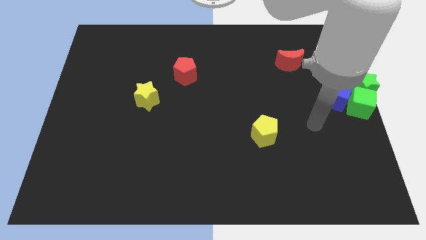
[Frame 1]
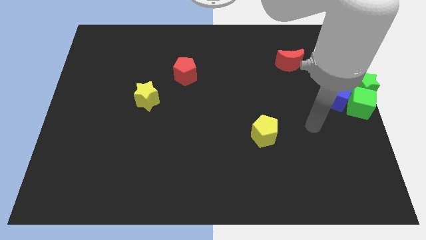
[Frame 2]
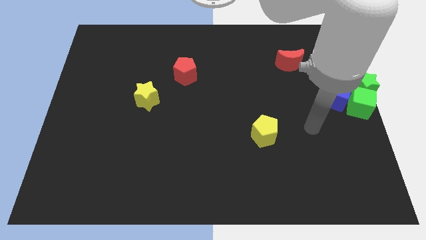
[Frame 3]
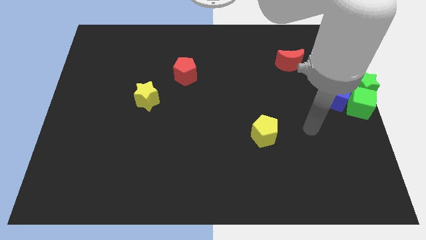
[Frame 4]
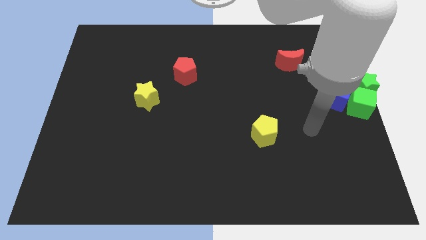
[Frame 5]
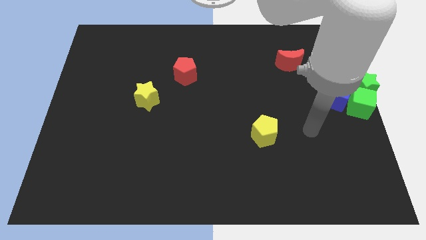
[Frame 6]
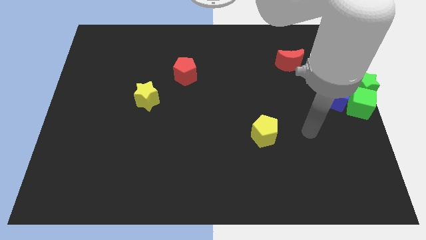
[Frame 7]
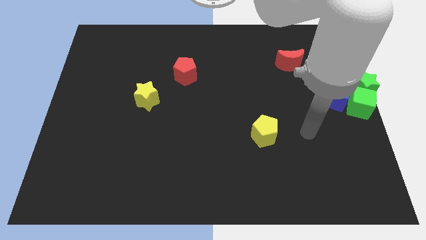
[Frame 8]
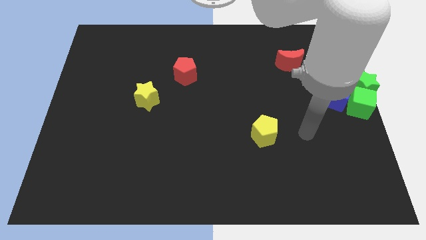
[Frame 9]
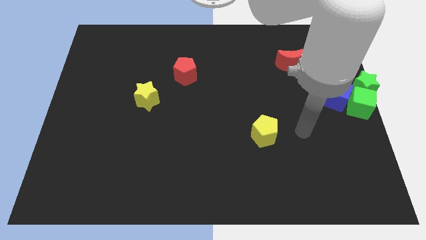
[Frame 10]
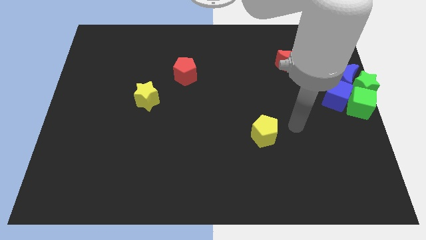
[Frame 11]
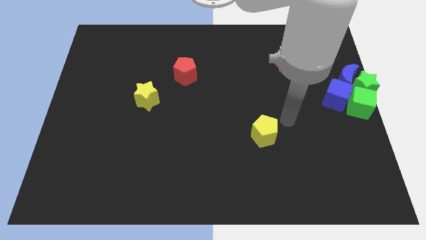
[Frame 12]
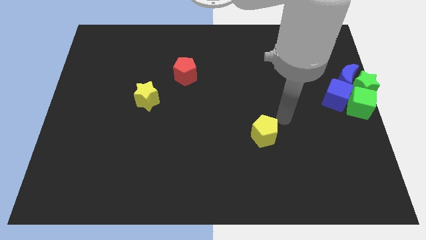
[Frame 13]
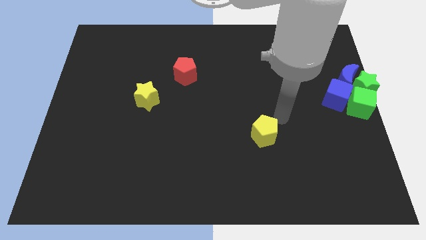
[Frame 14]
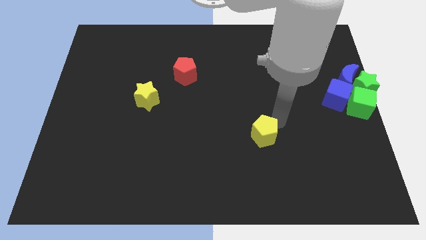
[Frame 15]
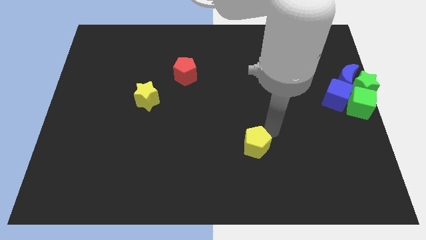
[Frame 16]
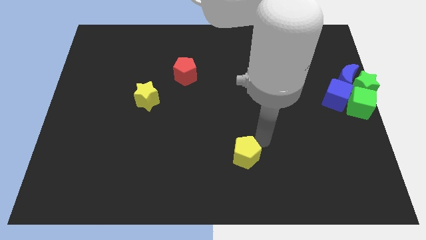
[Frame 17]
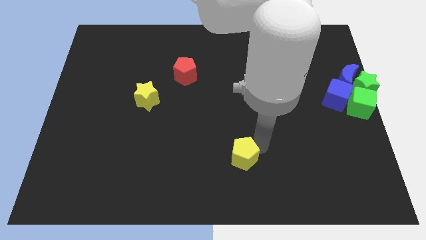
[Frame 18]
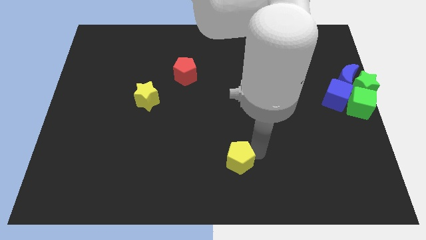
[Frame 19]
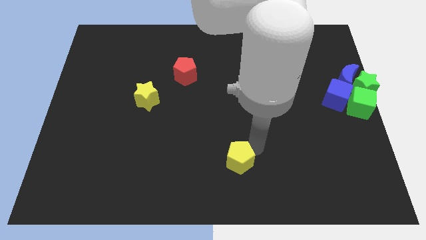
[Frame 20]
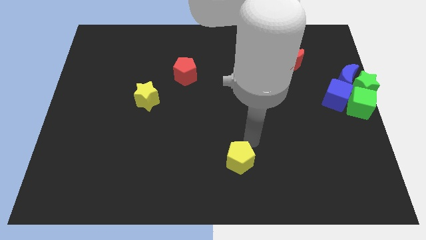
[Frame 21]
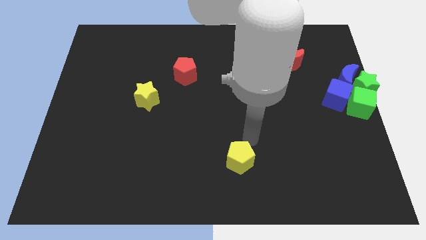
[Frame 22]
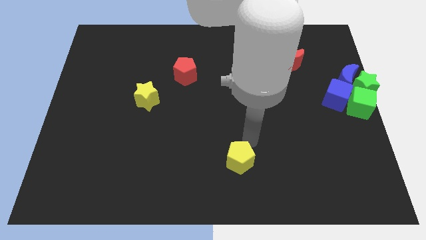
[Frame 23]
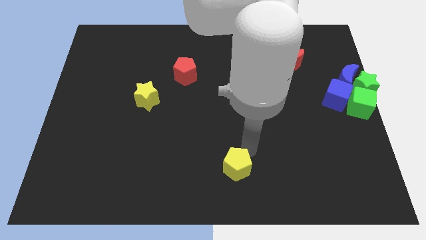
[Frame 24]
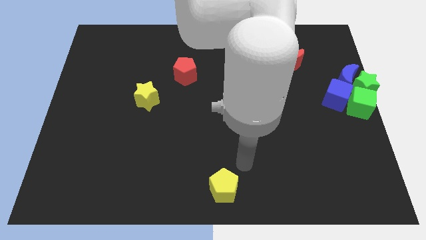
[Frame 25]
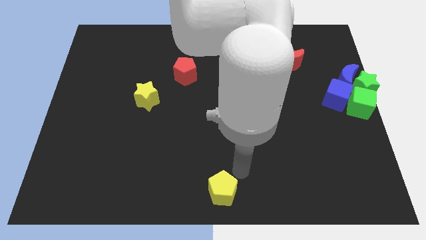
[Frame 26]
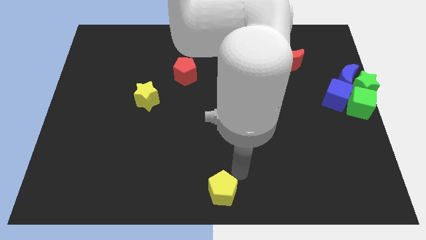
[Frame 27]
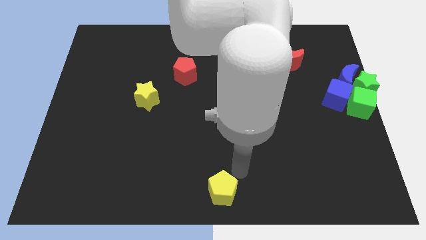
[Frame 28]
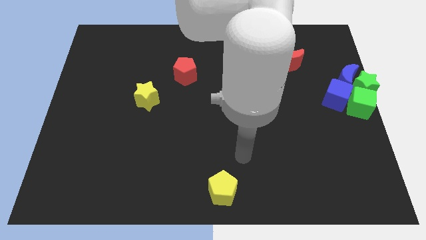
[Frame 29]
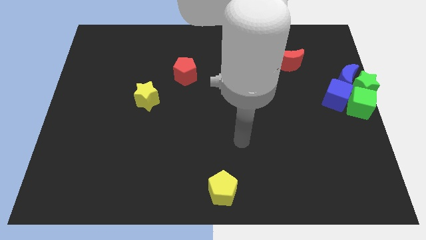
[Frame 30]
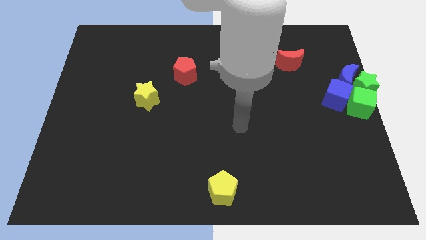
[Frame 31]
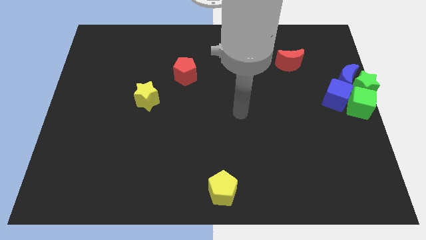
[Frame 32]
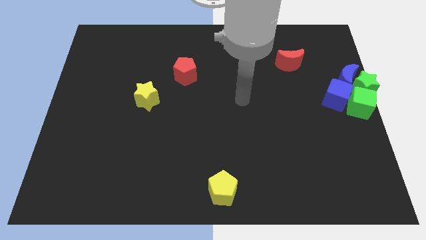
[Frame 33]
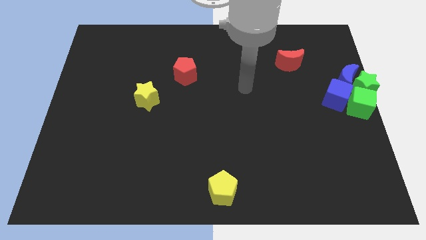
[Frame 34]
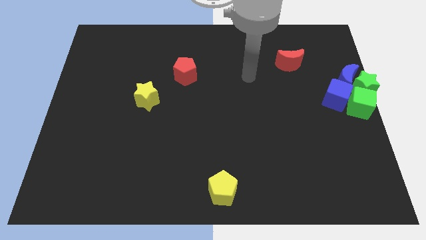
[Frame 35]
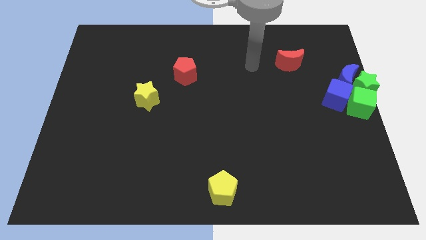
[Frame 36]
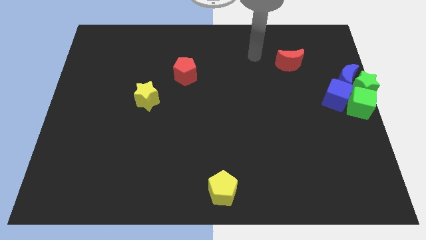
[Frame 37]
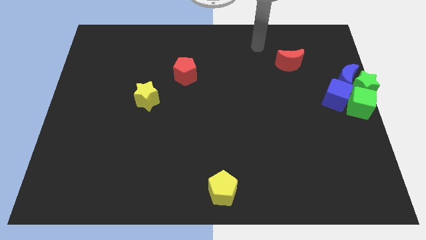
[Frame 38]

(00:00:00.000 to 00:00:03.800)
place the yellow pentagon towards the center of the board

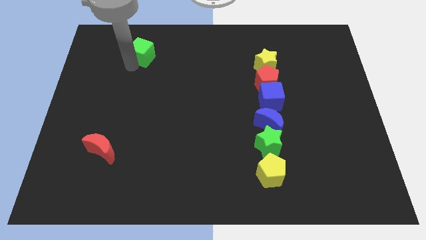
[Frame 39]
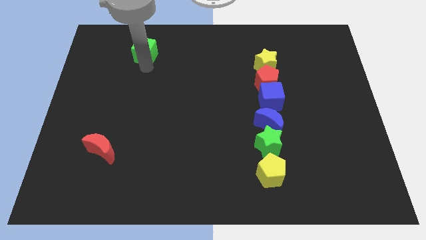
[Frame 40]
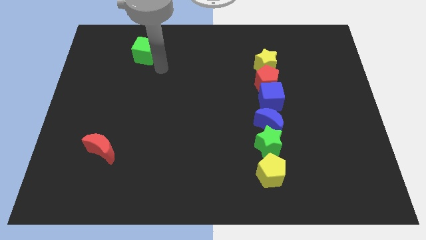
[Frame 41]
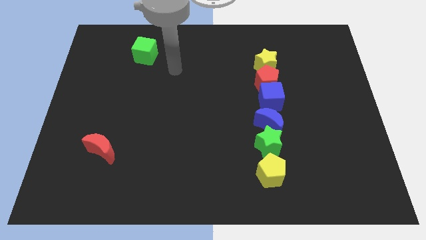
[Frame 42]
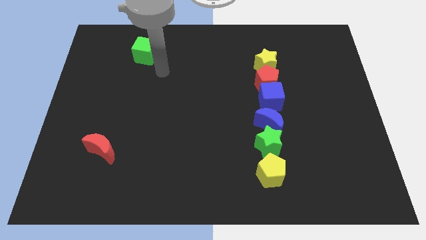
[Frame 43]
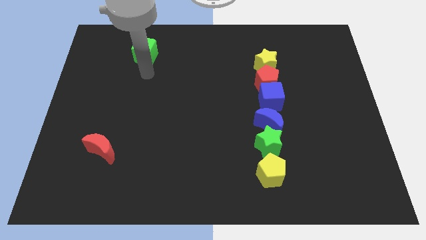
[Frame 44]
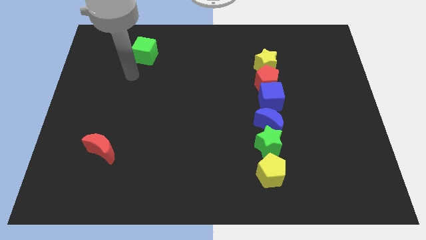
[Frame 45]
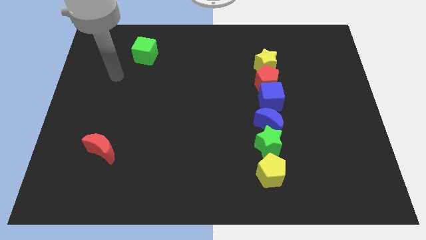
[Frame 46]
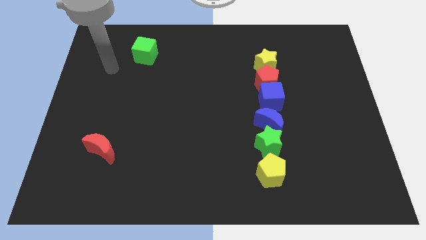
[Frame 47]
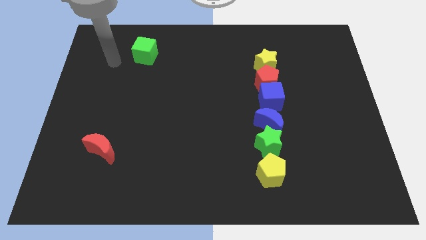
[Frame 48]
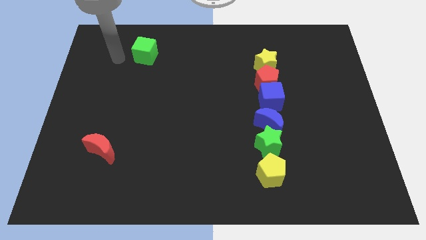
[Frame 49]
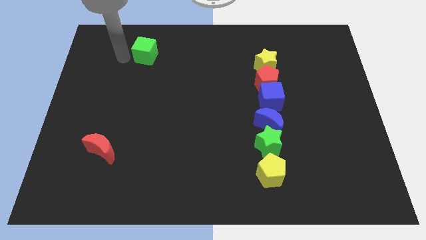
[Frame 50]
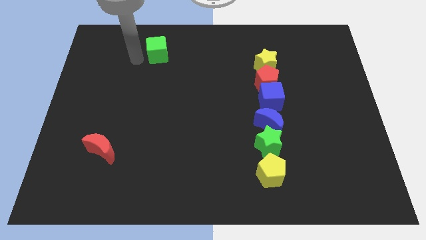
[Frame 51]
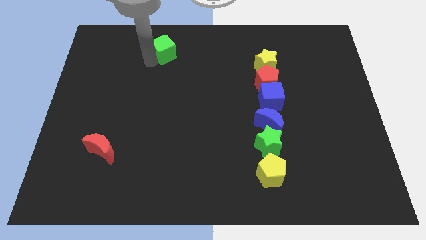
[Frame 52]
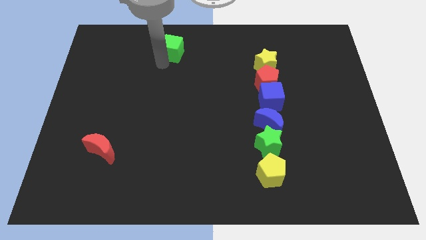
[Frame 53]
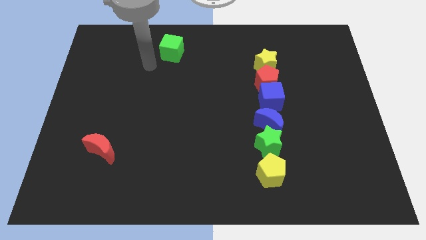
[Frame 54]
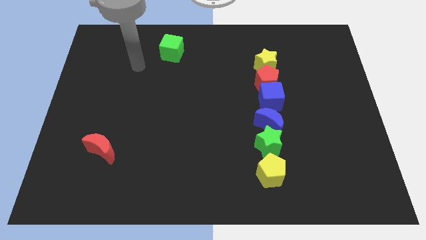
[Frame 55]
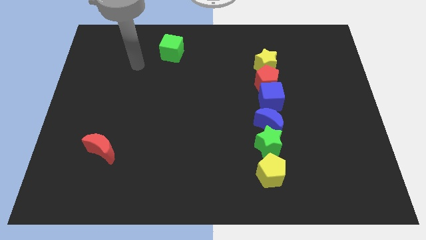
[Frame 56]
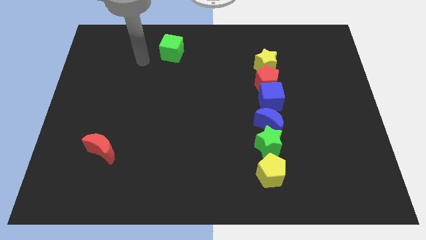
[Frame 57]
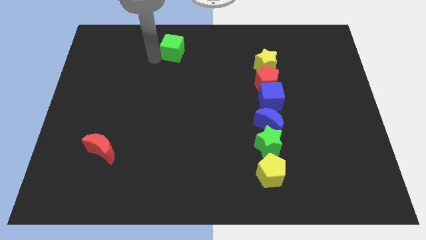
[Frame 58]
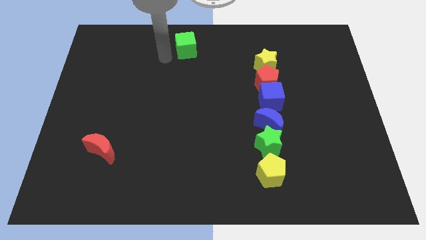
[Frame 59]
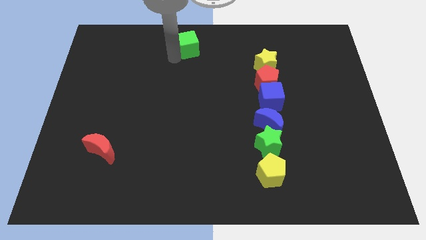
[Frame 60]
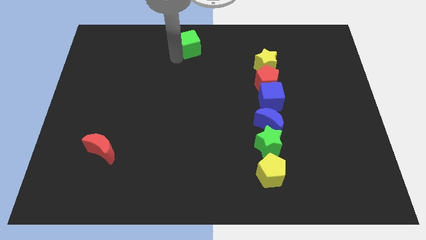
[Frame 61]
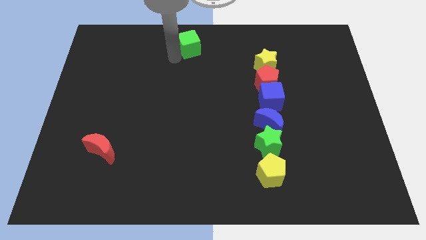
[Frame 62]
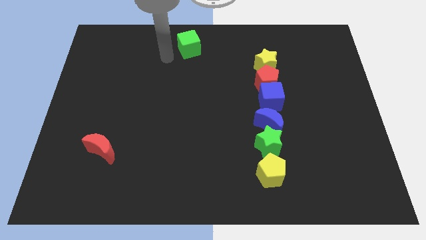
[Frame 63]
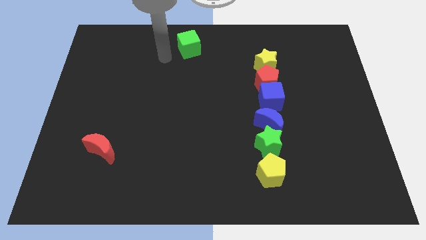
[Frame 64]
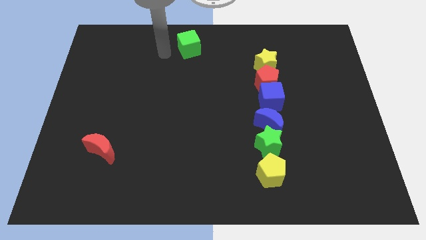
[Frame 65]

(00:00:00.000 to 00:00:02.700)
push green cube diagonally upwards to the top

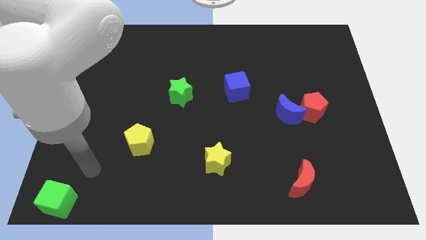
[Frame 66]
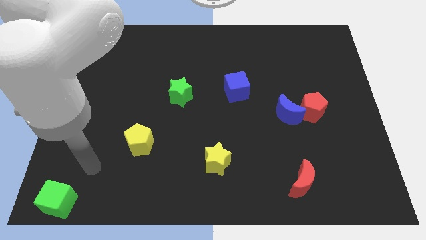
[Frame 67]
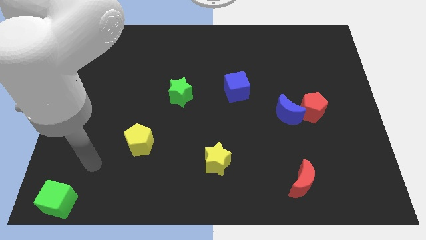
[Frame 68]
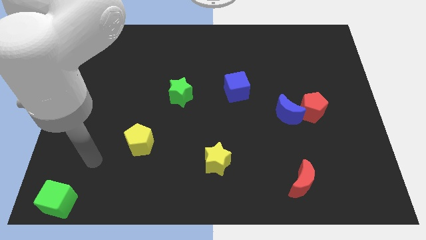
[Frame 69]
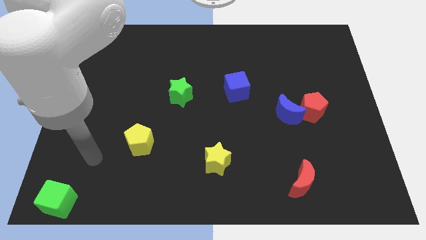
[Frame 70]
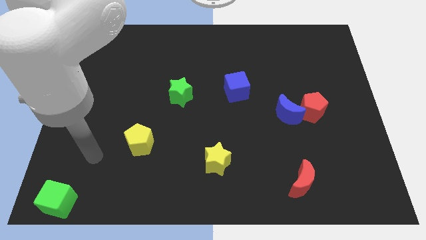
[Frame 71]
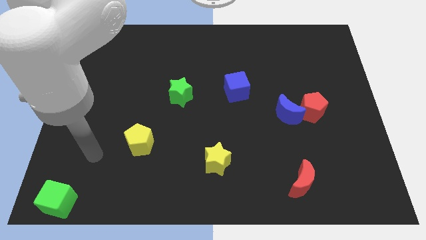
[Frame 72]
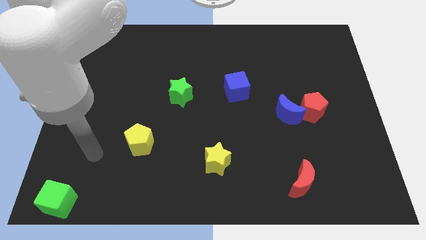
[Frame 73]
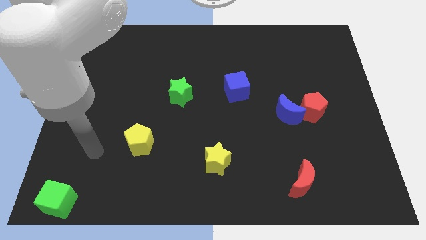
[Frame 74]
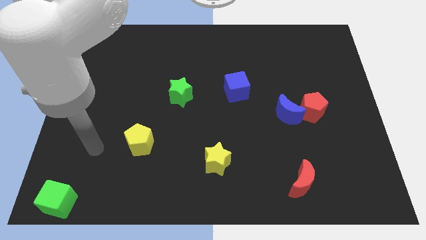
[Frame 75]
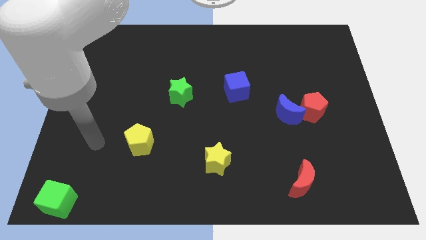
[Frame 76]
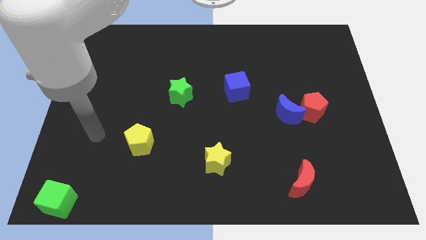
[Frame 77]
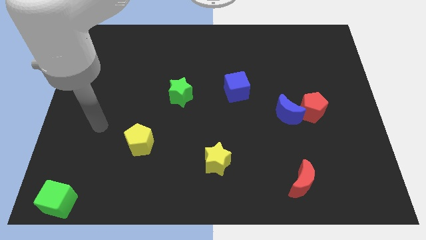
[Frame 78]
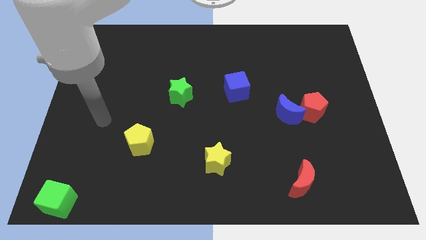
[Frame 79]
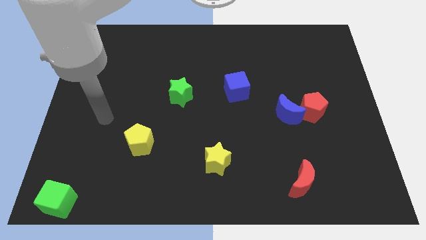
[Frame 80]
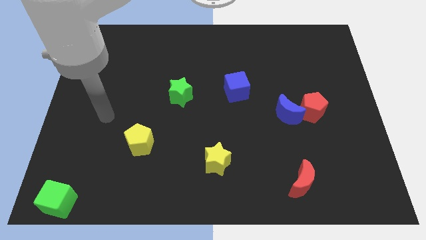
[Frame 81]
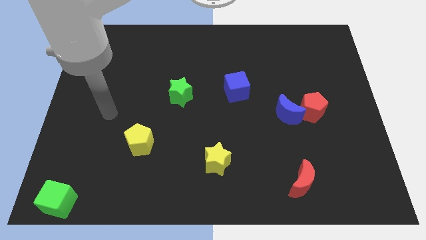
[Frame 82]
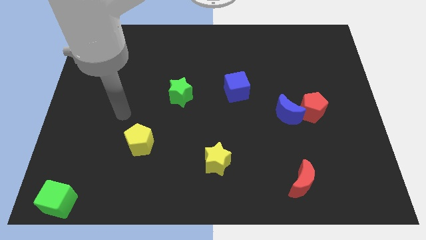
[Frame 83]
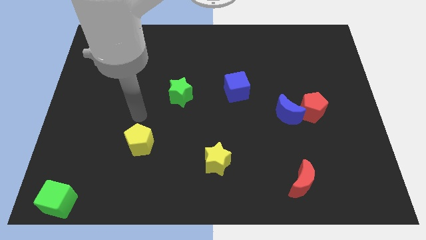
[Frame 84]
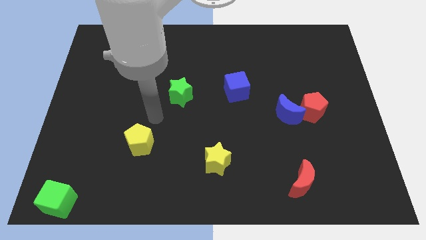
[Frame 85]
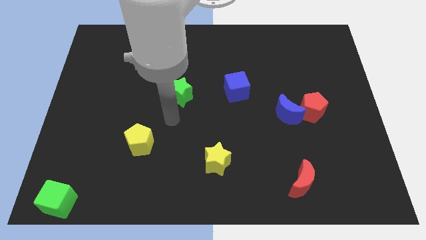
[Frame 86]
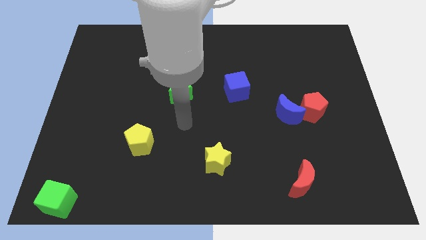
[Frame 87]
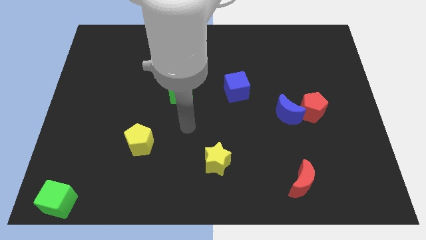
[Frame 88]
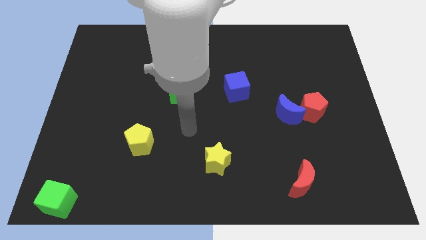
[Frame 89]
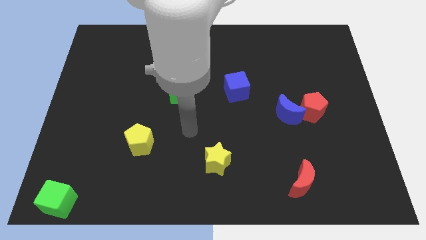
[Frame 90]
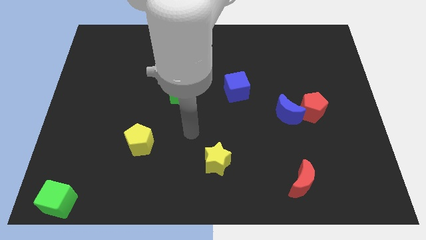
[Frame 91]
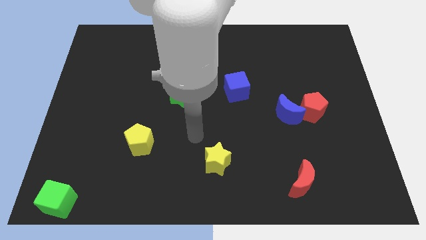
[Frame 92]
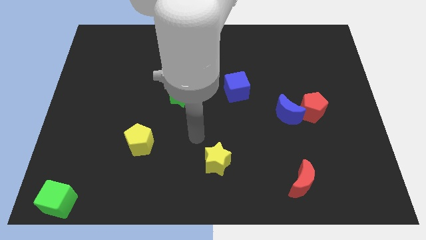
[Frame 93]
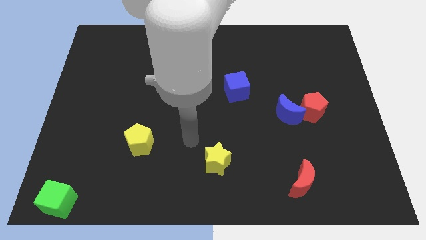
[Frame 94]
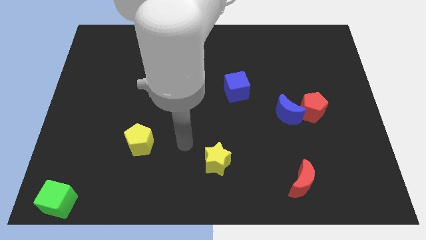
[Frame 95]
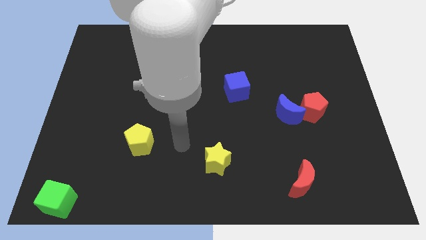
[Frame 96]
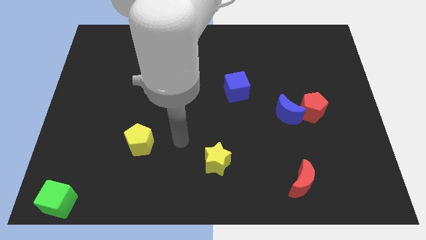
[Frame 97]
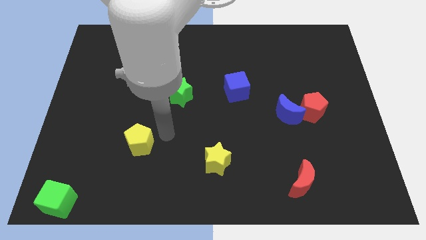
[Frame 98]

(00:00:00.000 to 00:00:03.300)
move your hand in between the yellow blocks
